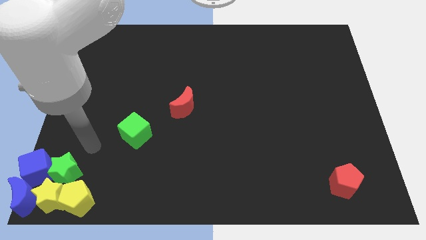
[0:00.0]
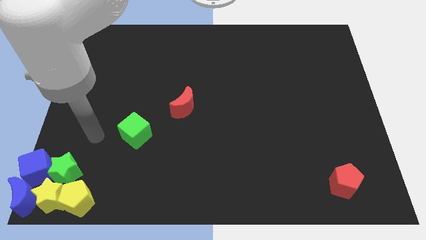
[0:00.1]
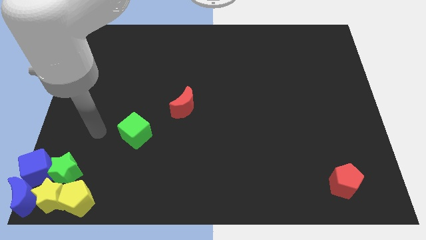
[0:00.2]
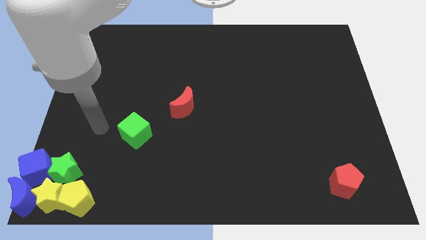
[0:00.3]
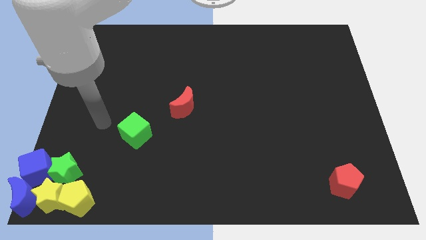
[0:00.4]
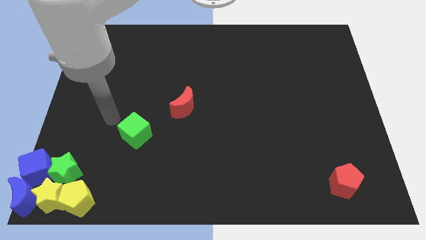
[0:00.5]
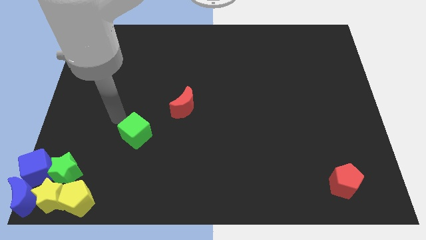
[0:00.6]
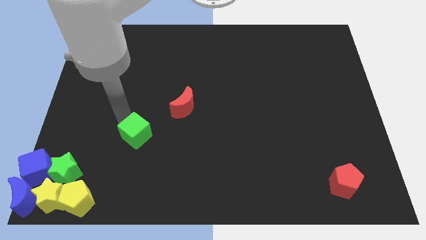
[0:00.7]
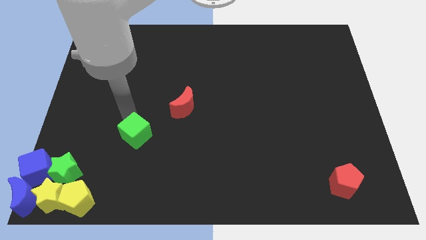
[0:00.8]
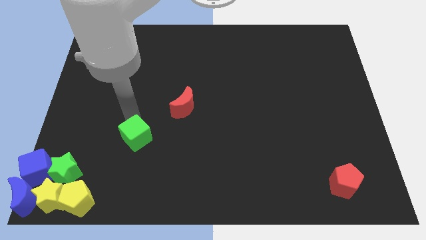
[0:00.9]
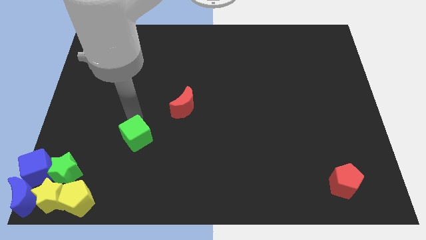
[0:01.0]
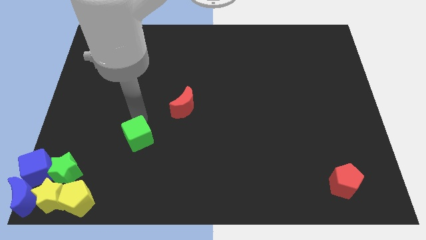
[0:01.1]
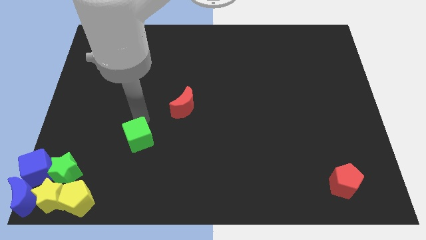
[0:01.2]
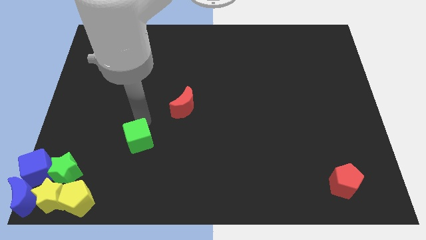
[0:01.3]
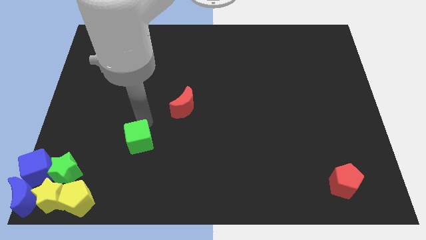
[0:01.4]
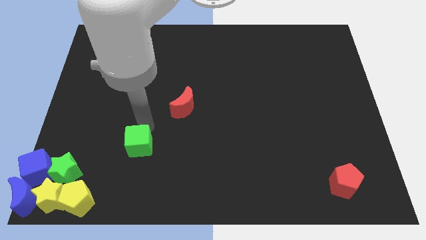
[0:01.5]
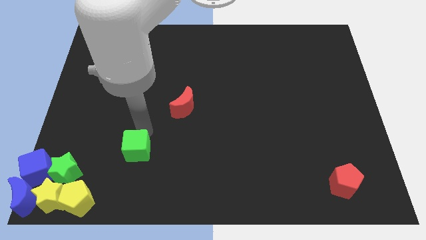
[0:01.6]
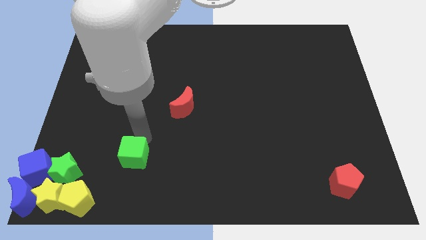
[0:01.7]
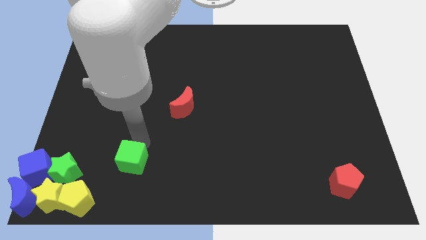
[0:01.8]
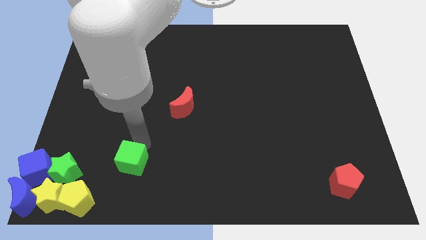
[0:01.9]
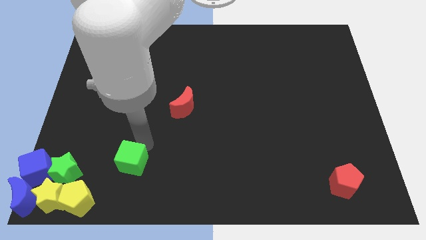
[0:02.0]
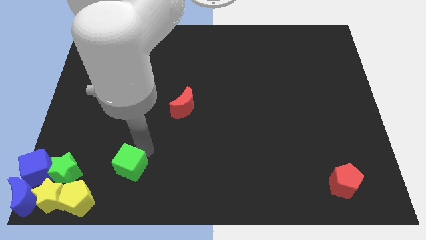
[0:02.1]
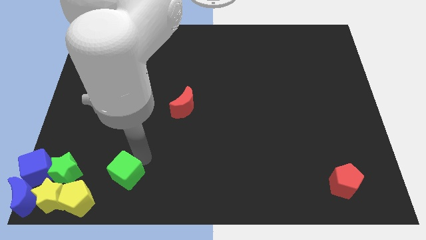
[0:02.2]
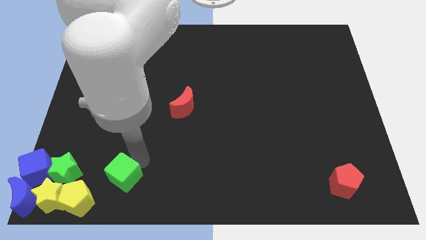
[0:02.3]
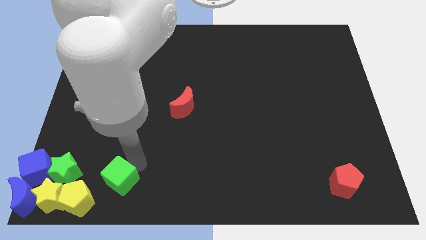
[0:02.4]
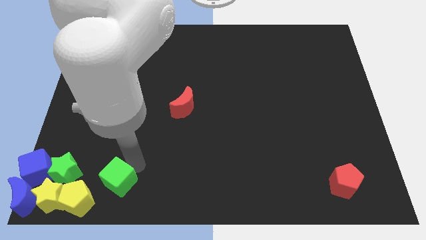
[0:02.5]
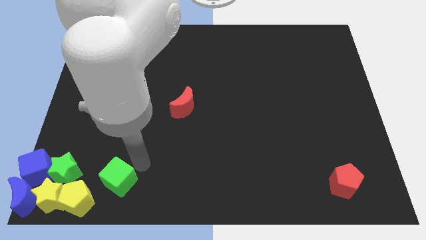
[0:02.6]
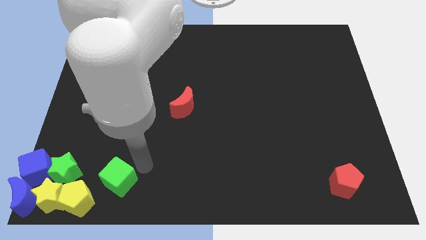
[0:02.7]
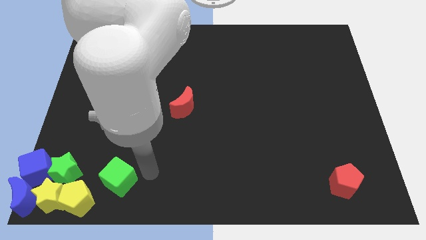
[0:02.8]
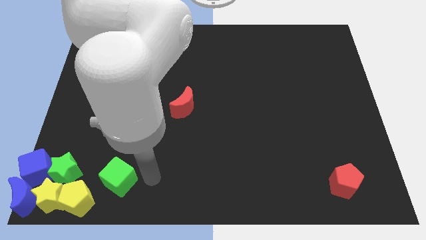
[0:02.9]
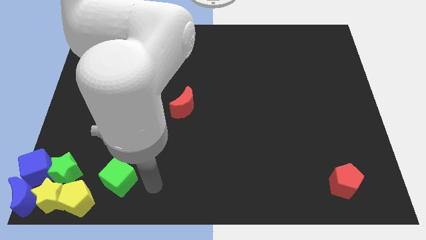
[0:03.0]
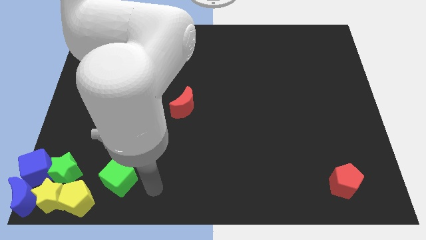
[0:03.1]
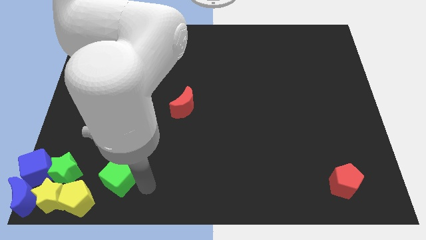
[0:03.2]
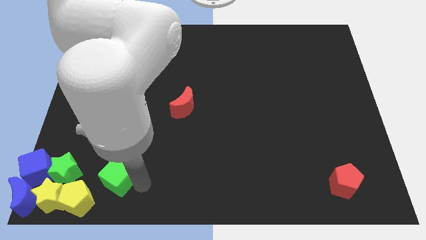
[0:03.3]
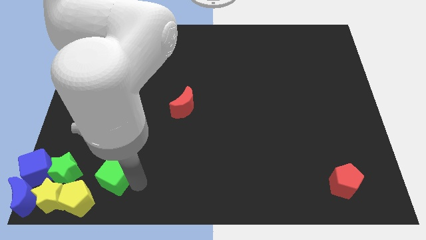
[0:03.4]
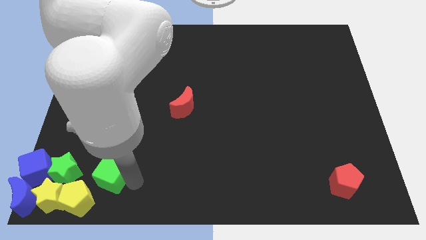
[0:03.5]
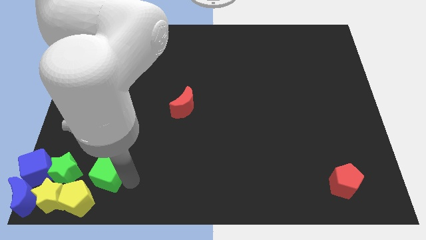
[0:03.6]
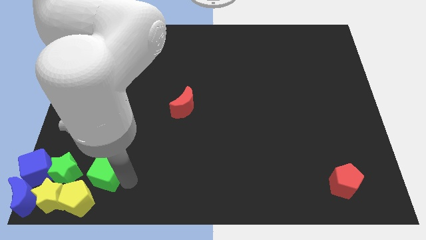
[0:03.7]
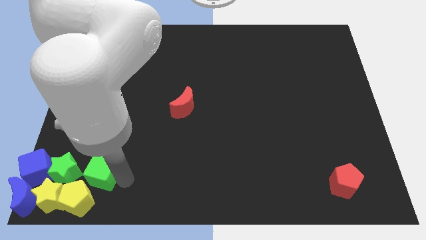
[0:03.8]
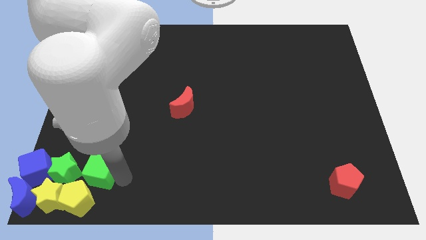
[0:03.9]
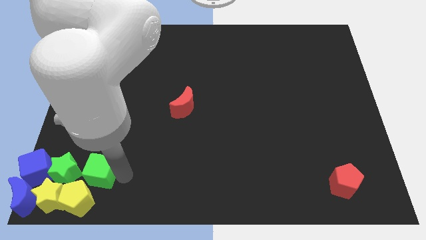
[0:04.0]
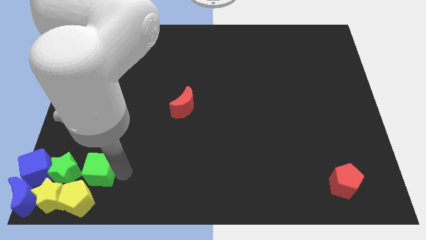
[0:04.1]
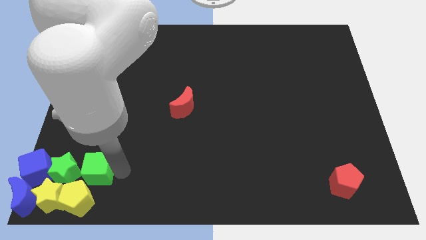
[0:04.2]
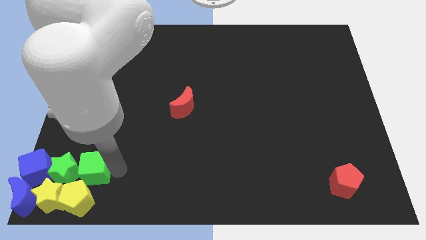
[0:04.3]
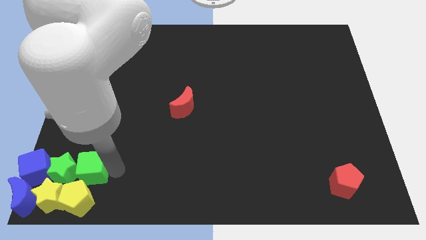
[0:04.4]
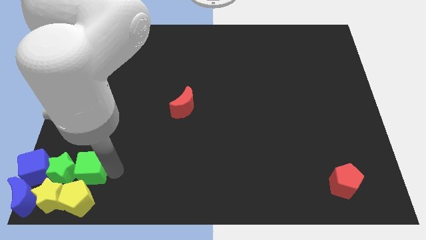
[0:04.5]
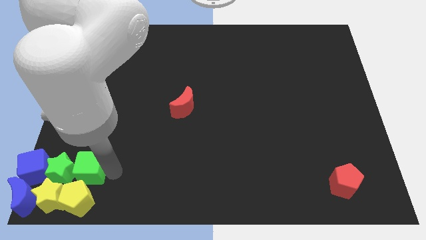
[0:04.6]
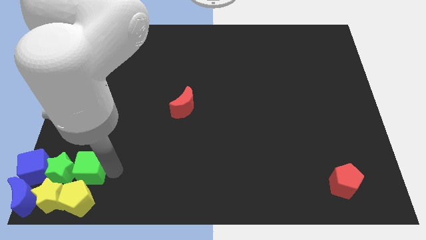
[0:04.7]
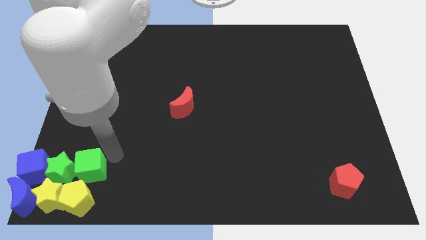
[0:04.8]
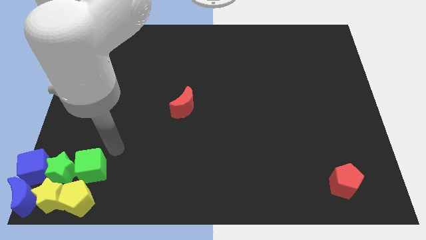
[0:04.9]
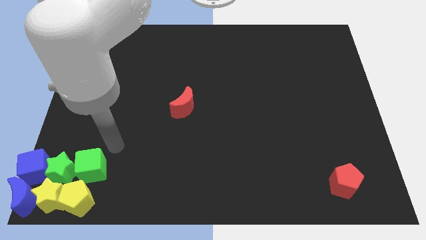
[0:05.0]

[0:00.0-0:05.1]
move the green cube to the right side of the green star

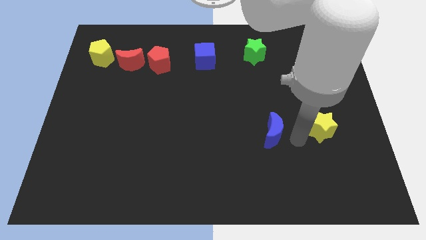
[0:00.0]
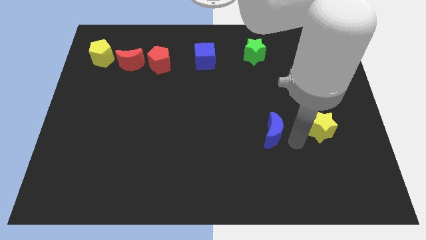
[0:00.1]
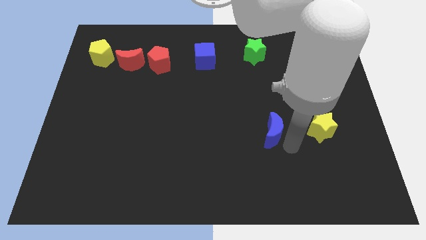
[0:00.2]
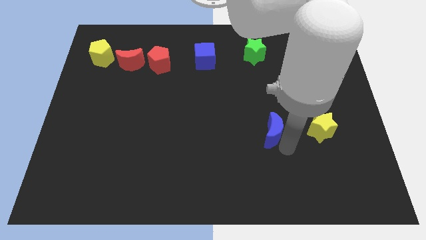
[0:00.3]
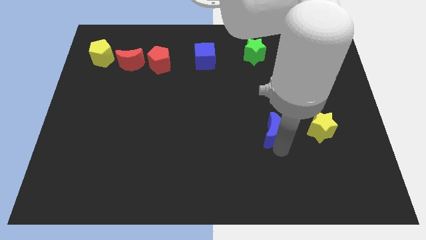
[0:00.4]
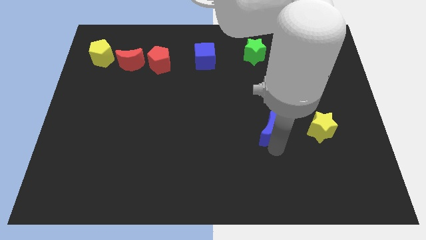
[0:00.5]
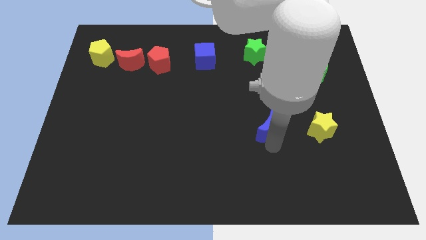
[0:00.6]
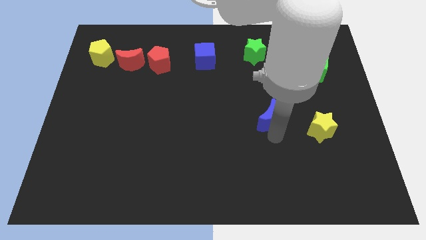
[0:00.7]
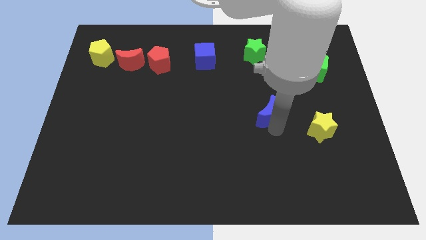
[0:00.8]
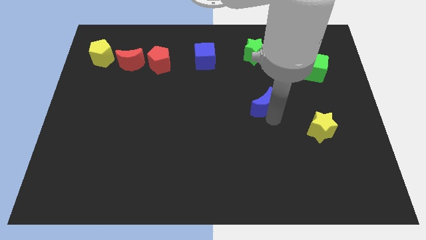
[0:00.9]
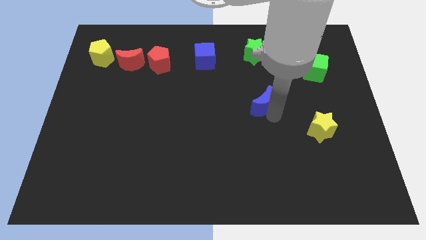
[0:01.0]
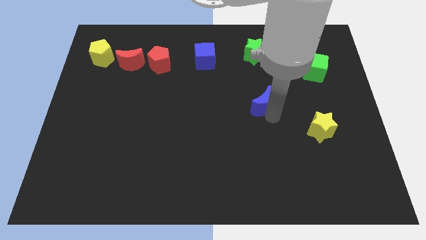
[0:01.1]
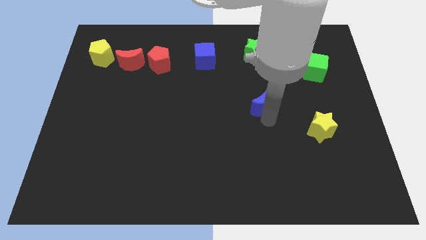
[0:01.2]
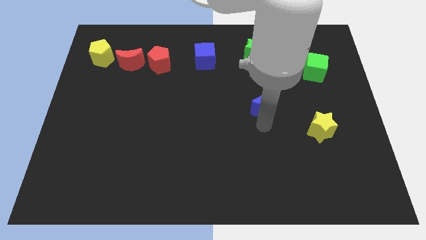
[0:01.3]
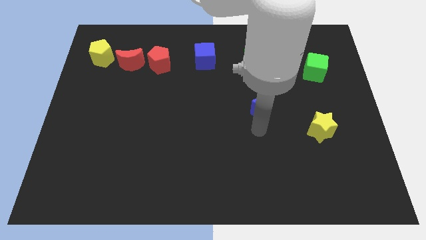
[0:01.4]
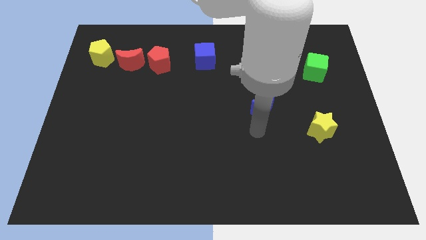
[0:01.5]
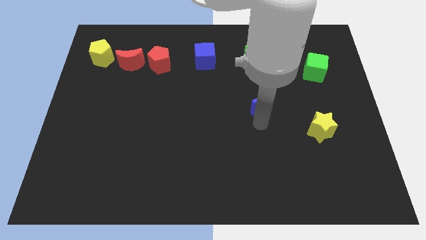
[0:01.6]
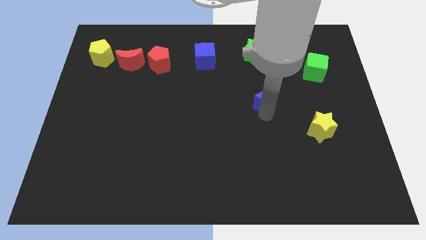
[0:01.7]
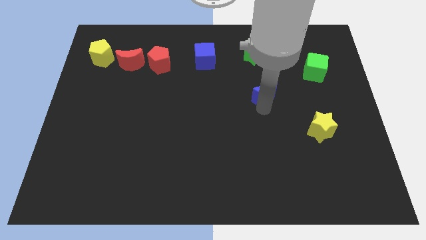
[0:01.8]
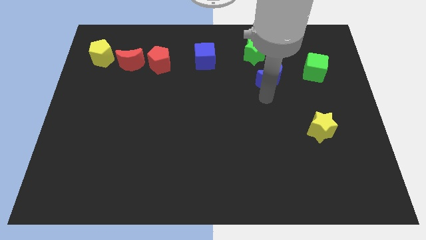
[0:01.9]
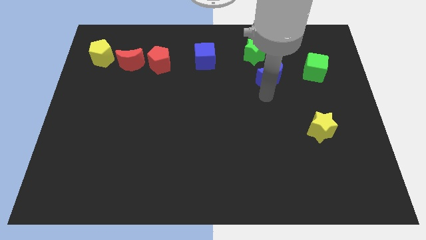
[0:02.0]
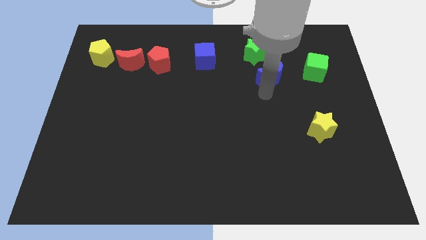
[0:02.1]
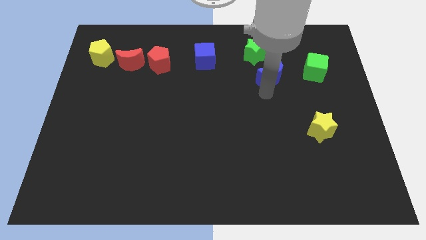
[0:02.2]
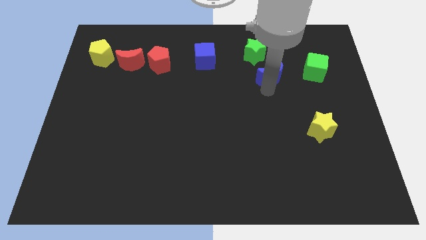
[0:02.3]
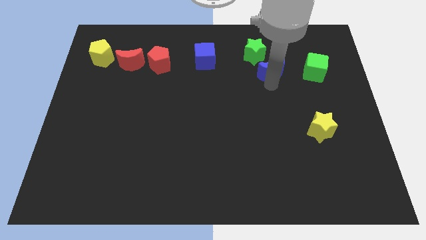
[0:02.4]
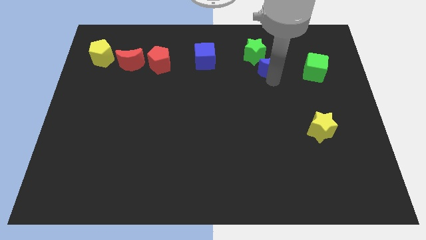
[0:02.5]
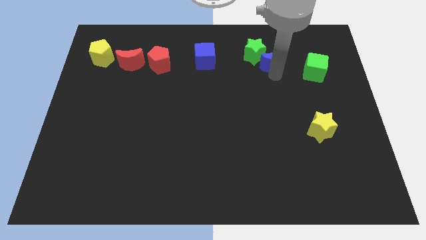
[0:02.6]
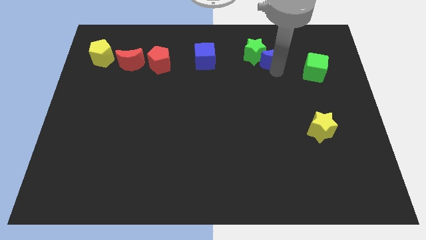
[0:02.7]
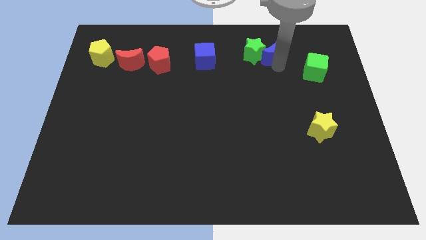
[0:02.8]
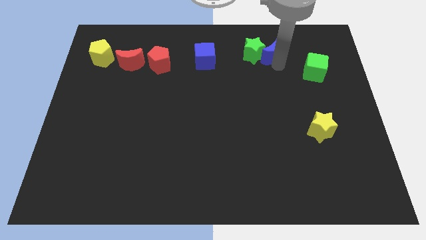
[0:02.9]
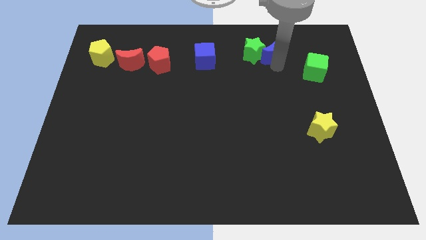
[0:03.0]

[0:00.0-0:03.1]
move the blue moon between green star and green cube

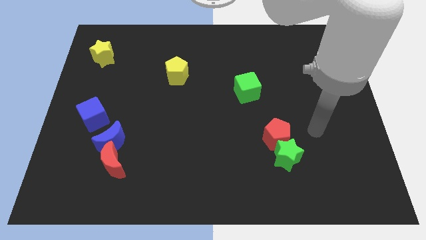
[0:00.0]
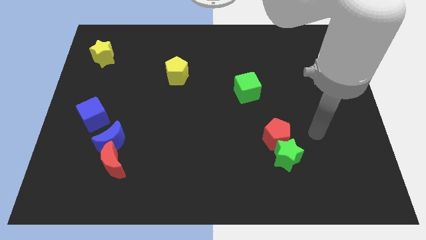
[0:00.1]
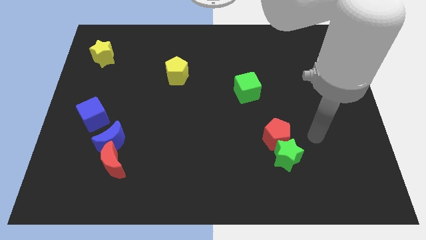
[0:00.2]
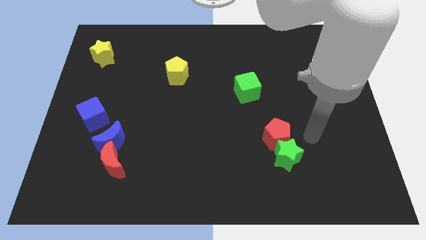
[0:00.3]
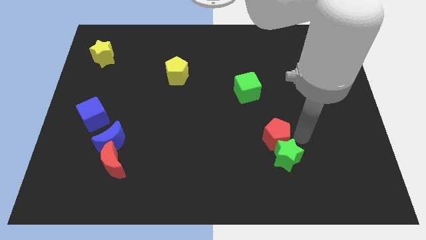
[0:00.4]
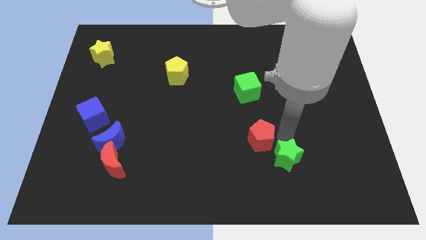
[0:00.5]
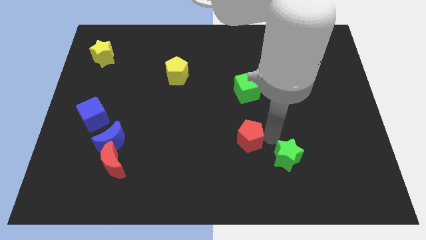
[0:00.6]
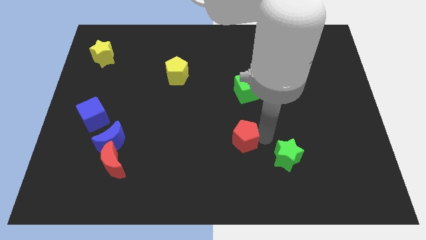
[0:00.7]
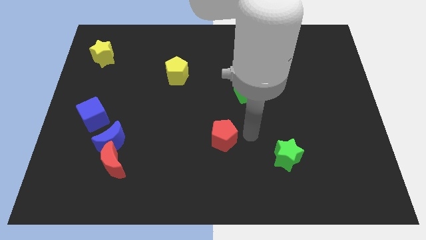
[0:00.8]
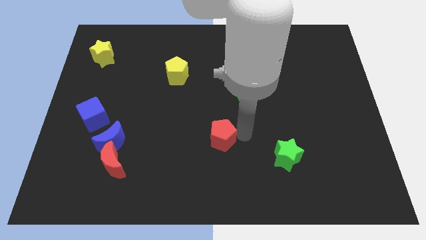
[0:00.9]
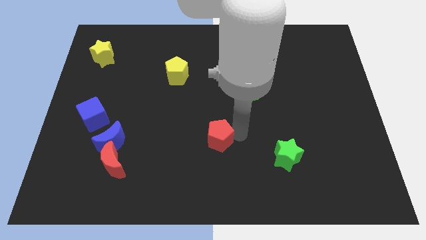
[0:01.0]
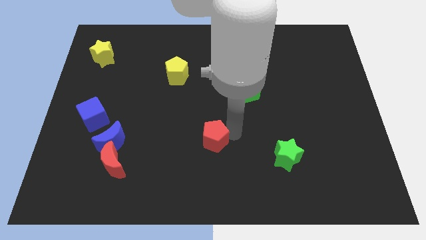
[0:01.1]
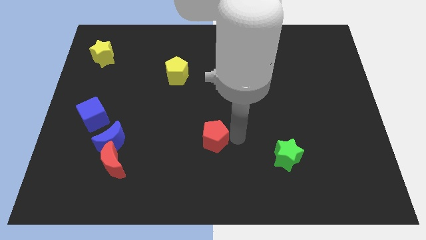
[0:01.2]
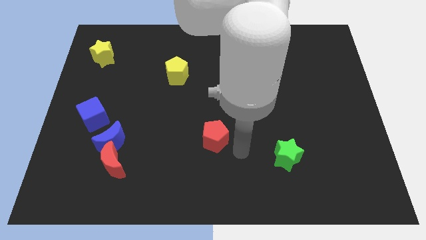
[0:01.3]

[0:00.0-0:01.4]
separate the red pentagon from the green star
